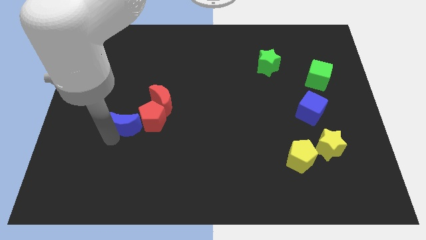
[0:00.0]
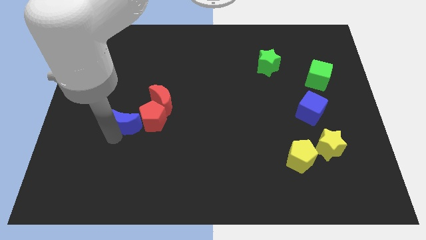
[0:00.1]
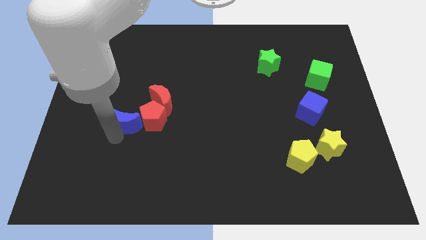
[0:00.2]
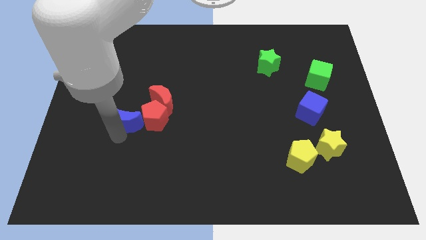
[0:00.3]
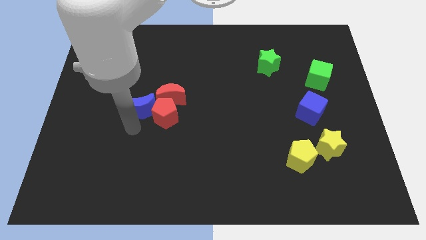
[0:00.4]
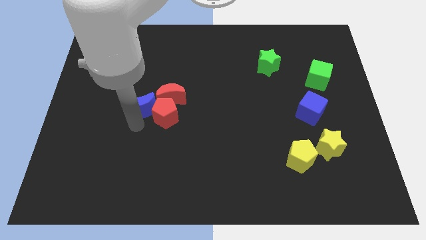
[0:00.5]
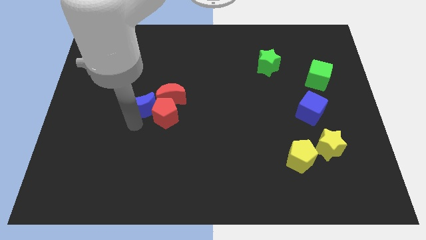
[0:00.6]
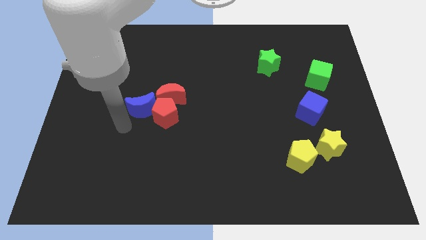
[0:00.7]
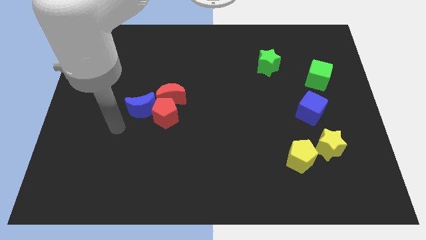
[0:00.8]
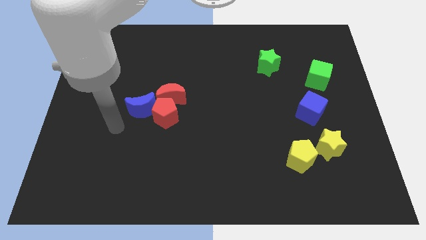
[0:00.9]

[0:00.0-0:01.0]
place blue crescent near red crescent

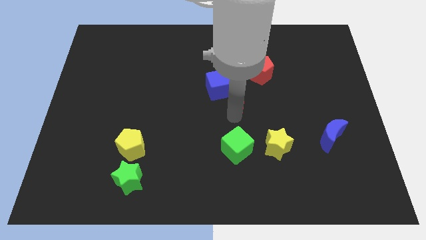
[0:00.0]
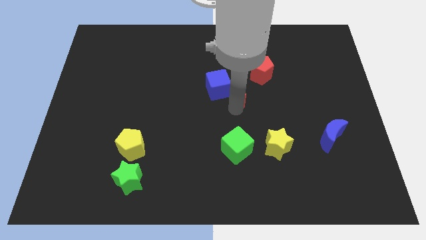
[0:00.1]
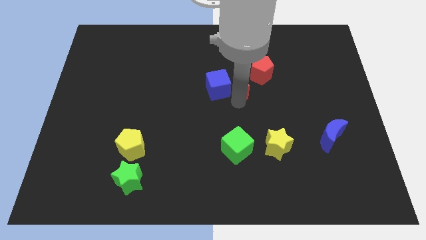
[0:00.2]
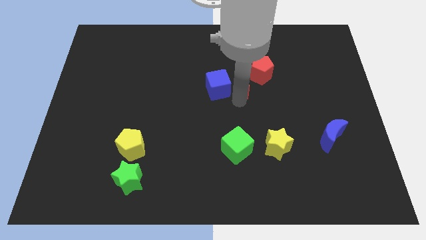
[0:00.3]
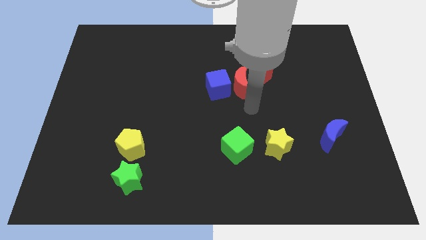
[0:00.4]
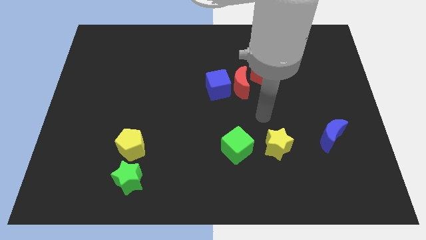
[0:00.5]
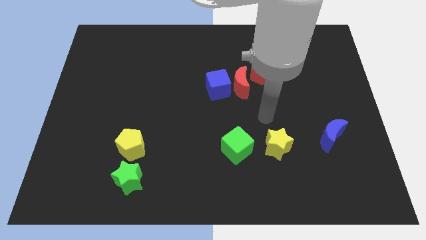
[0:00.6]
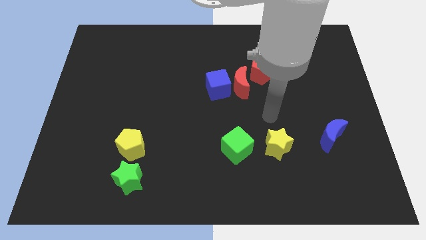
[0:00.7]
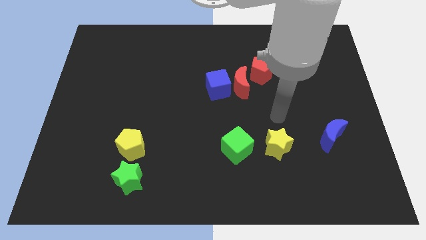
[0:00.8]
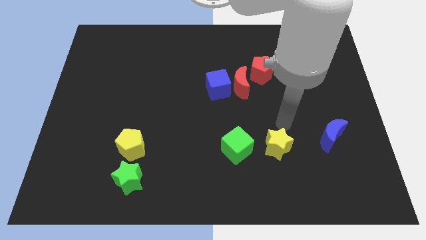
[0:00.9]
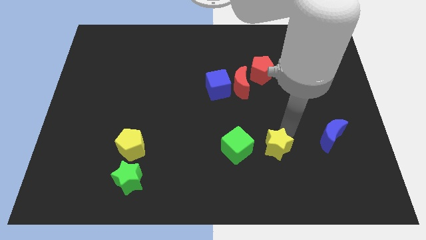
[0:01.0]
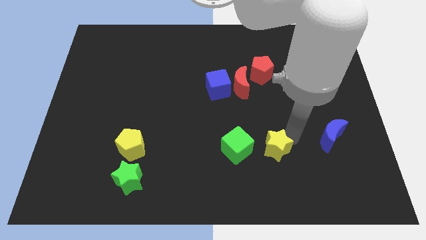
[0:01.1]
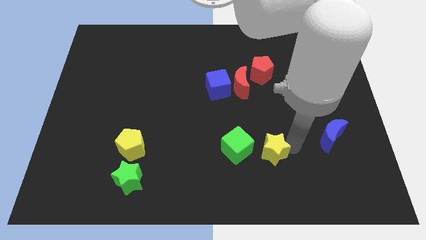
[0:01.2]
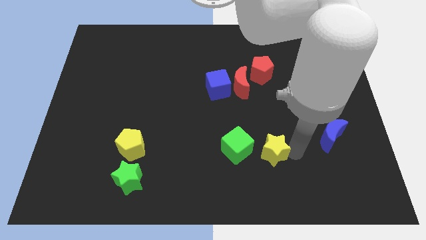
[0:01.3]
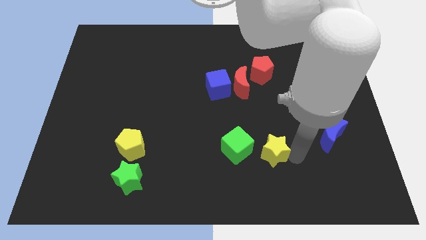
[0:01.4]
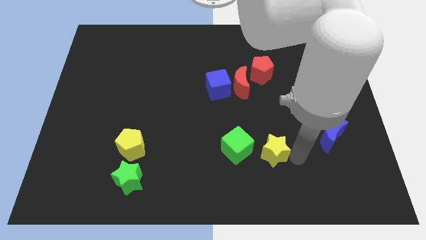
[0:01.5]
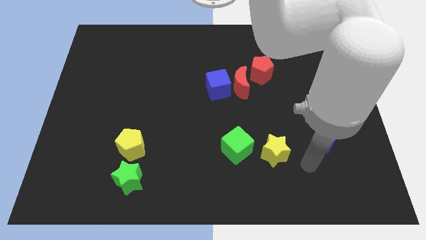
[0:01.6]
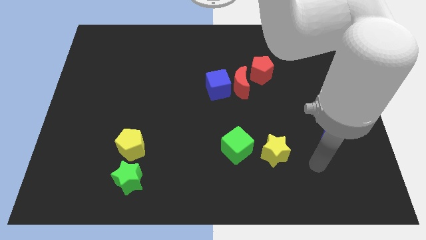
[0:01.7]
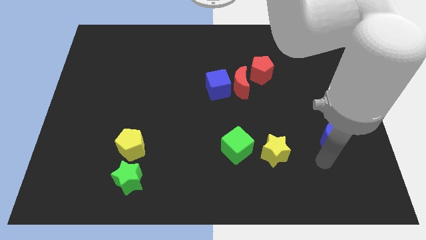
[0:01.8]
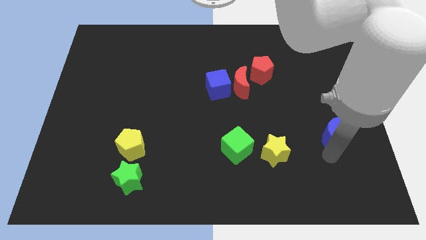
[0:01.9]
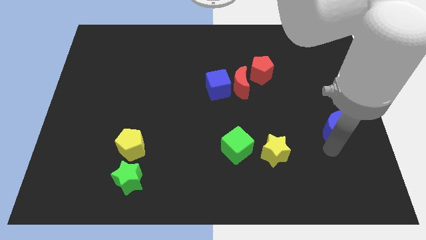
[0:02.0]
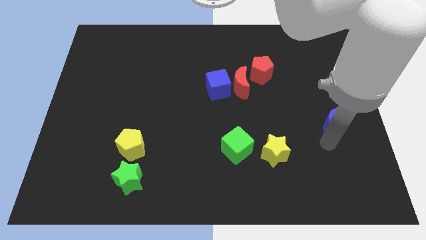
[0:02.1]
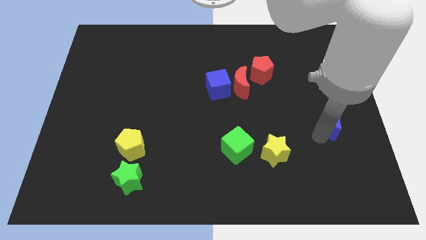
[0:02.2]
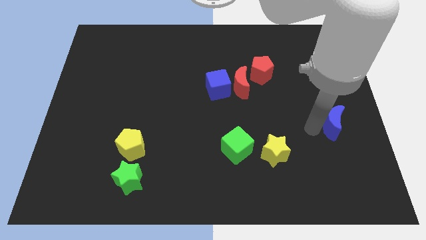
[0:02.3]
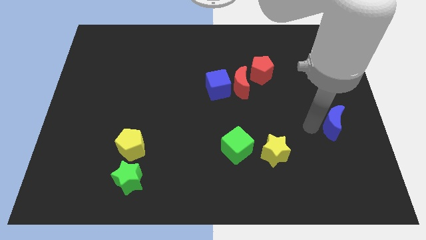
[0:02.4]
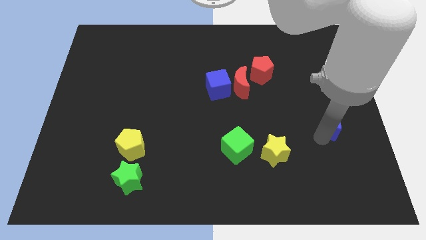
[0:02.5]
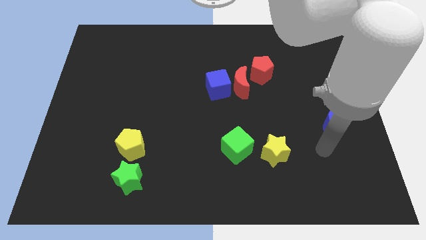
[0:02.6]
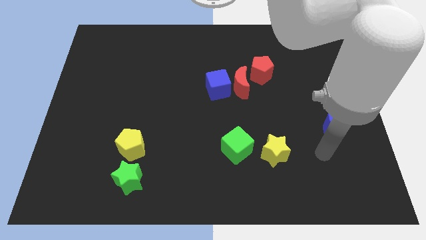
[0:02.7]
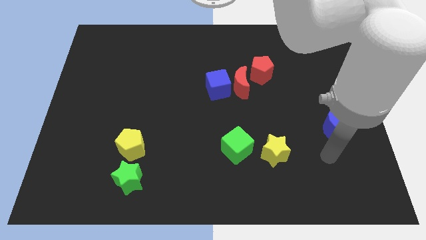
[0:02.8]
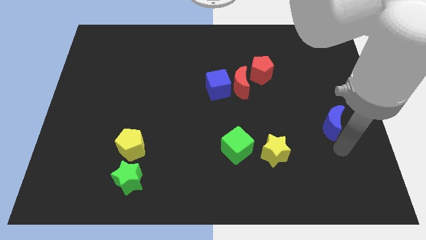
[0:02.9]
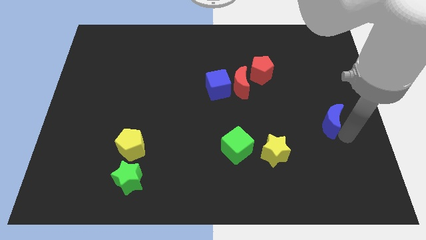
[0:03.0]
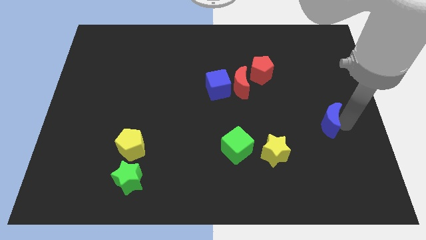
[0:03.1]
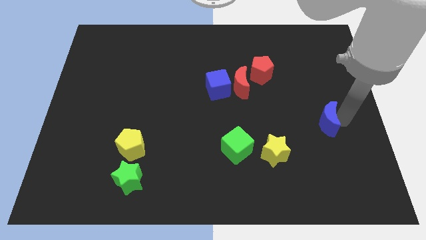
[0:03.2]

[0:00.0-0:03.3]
push yellow star slightly below

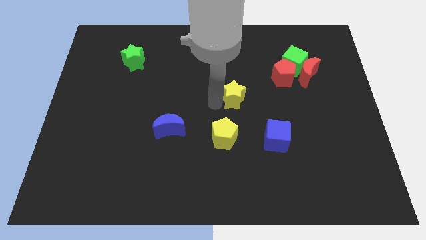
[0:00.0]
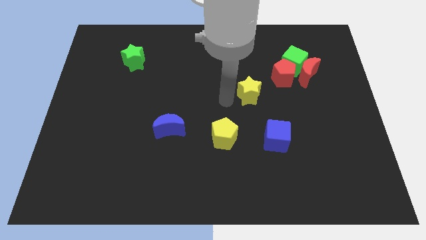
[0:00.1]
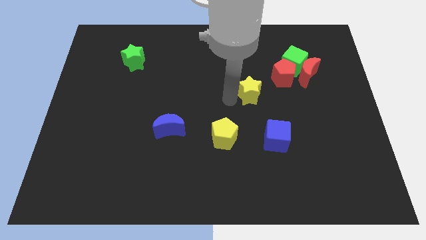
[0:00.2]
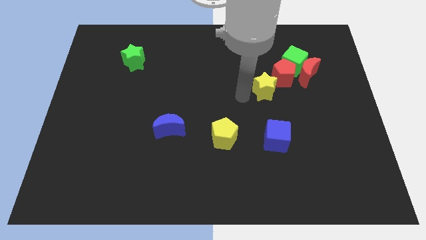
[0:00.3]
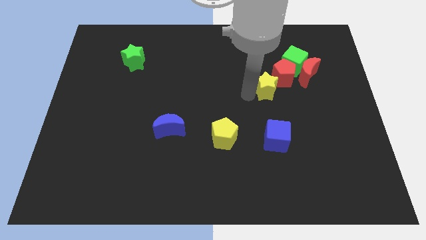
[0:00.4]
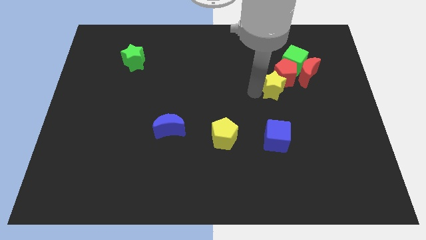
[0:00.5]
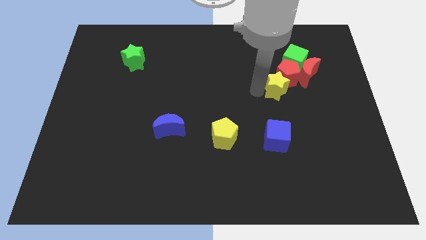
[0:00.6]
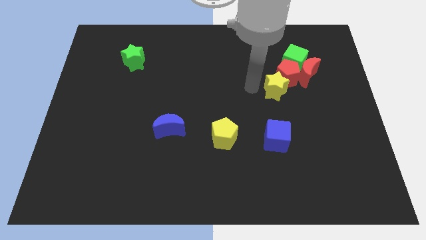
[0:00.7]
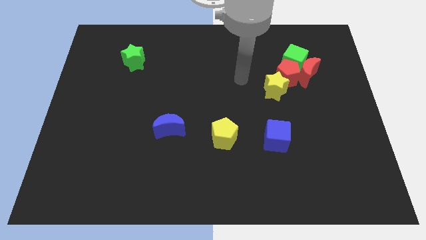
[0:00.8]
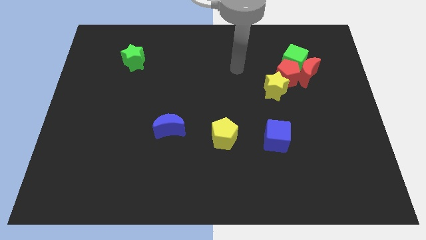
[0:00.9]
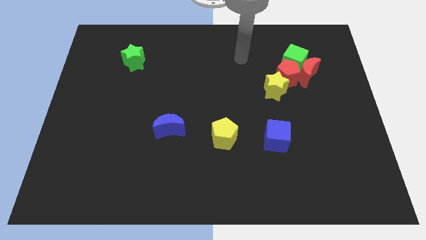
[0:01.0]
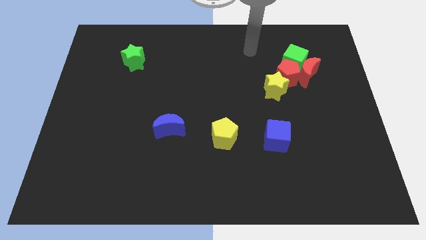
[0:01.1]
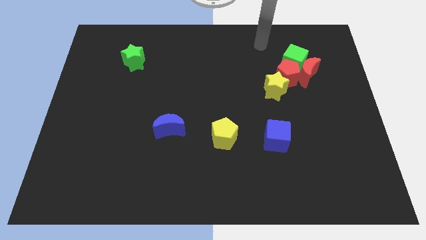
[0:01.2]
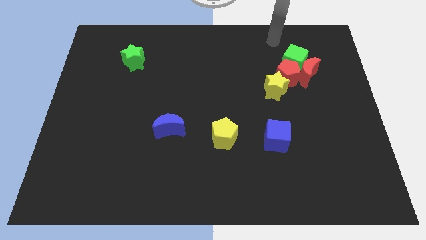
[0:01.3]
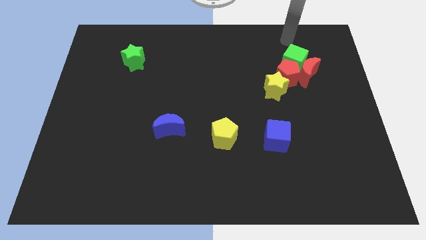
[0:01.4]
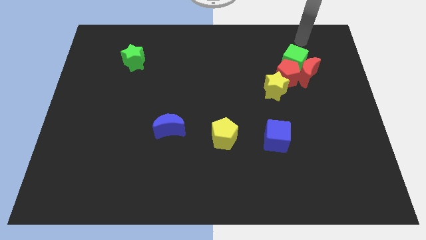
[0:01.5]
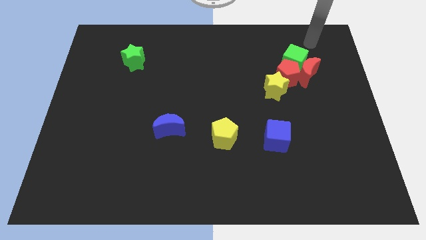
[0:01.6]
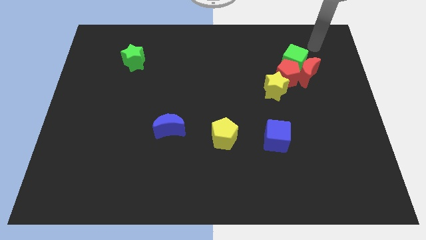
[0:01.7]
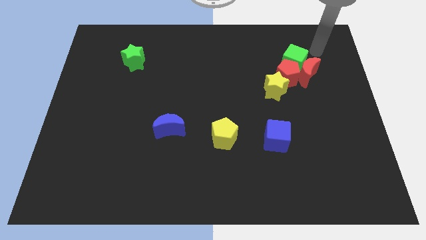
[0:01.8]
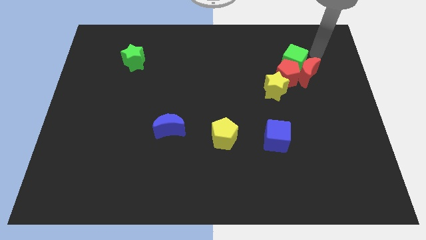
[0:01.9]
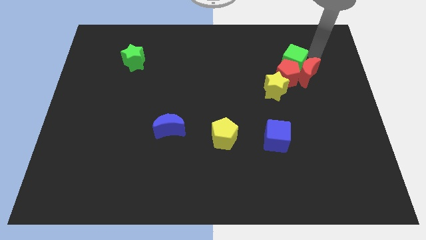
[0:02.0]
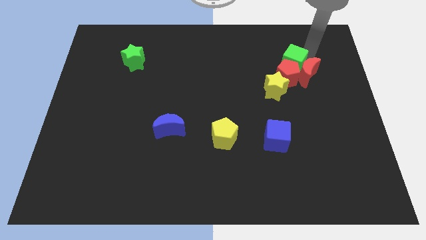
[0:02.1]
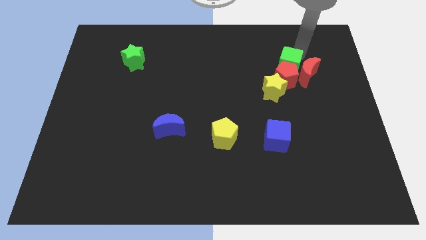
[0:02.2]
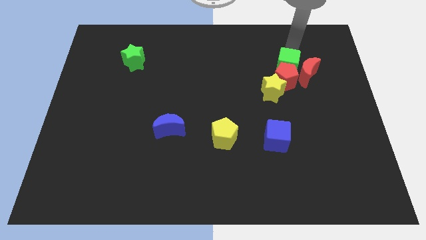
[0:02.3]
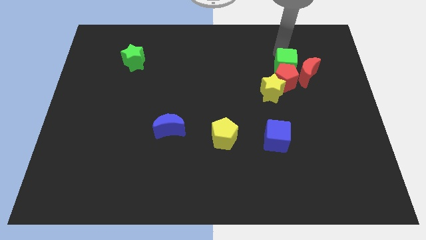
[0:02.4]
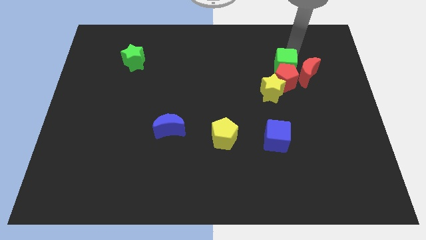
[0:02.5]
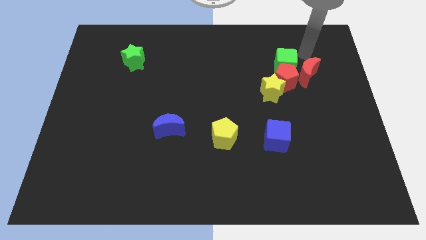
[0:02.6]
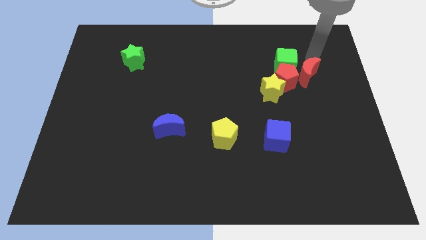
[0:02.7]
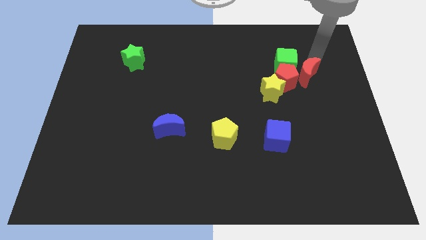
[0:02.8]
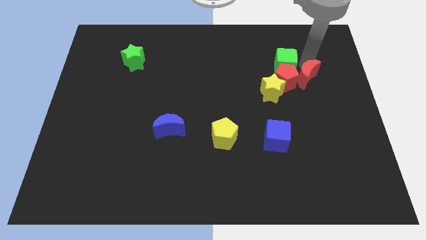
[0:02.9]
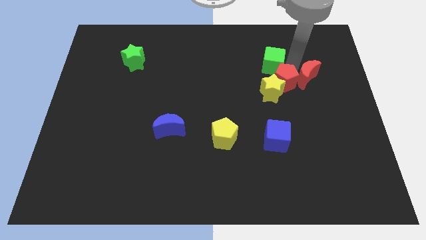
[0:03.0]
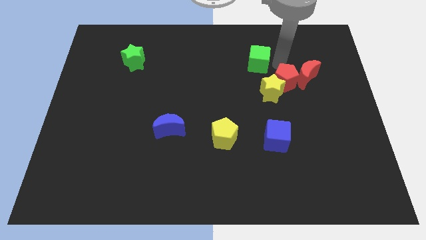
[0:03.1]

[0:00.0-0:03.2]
move your arm away from the yellow star

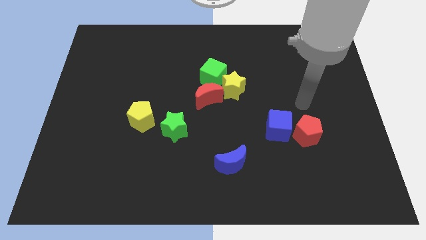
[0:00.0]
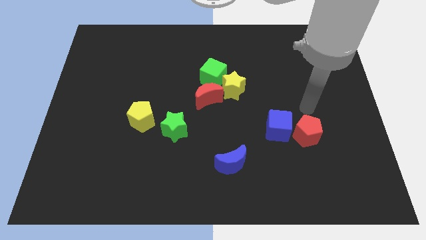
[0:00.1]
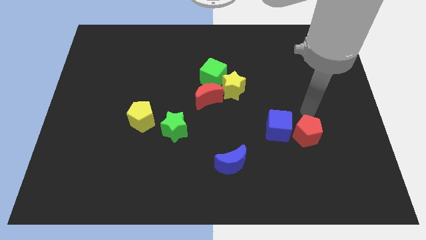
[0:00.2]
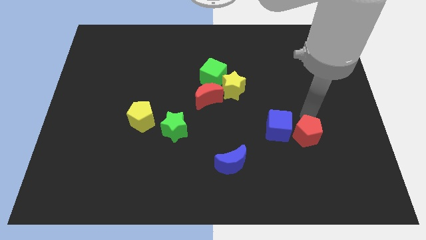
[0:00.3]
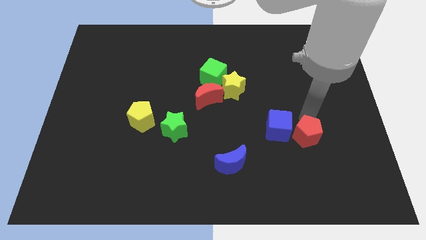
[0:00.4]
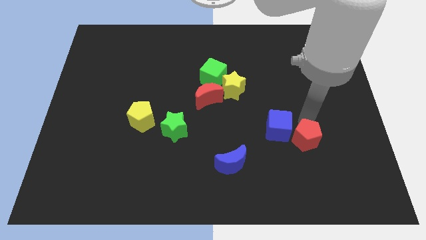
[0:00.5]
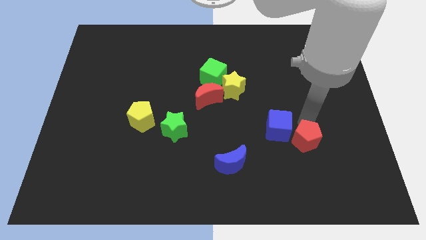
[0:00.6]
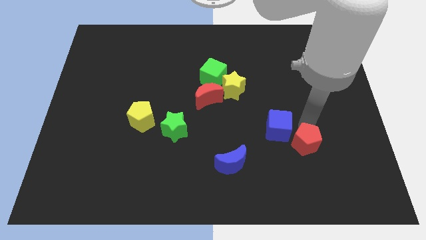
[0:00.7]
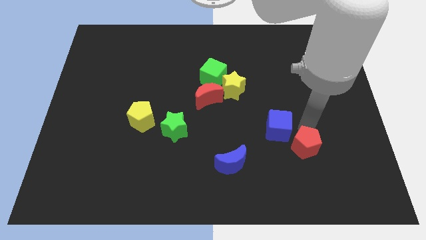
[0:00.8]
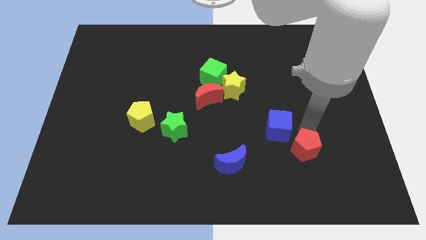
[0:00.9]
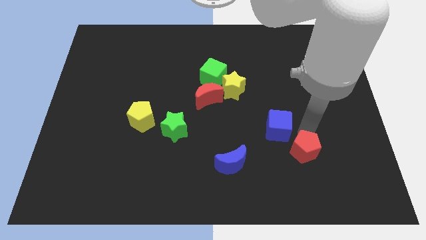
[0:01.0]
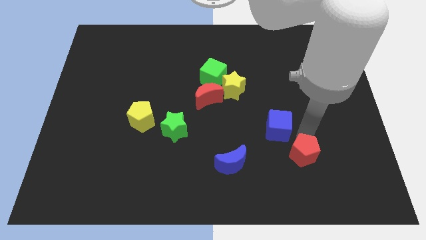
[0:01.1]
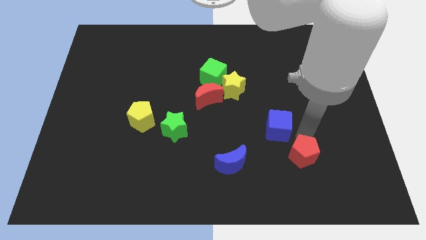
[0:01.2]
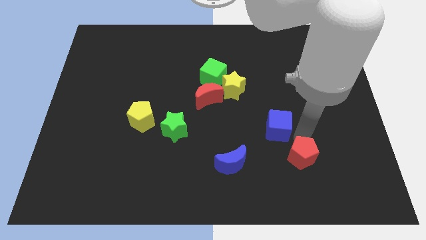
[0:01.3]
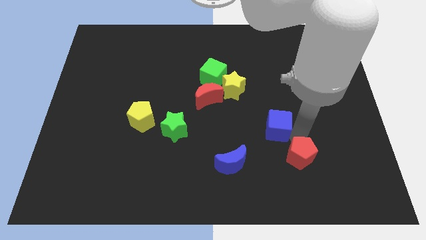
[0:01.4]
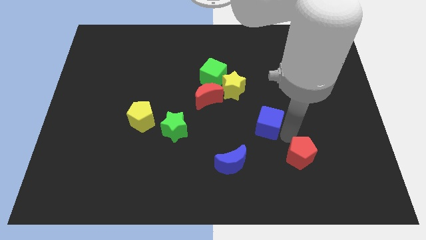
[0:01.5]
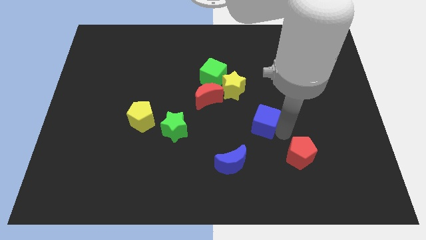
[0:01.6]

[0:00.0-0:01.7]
separate the red pentagon from blue cube
